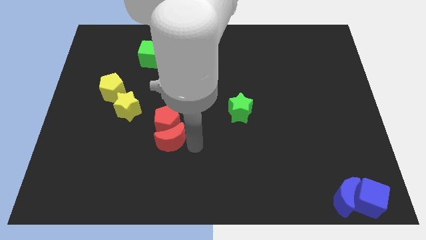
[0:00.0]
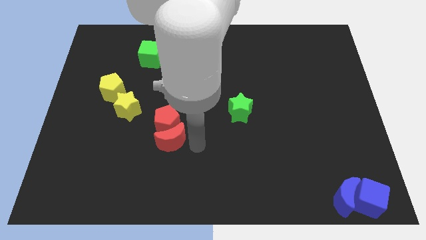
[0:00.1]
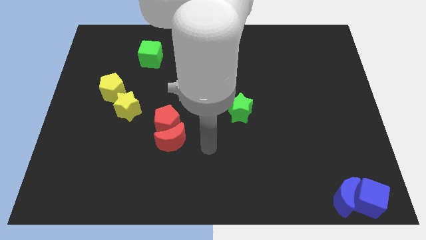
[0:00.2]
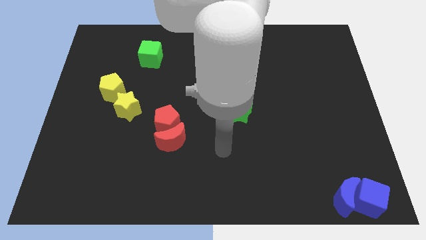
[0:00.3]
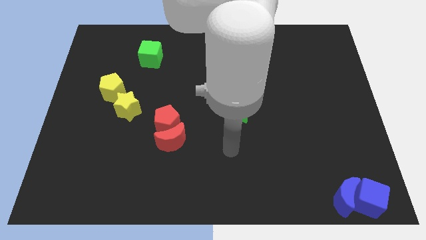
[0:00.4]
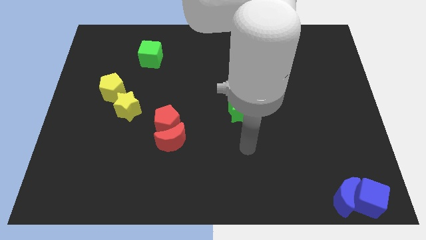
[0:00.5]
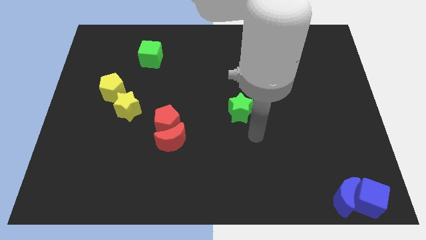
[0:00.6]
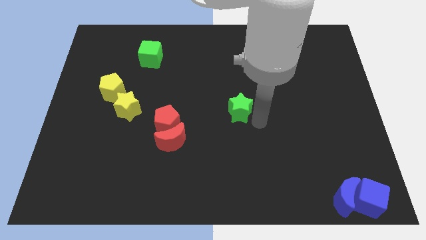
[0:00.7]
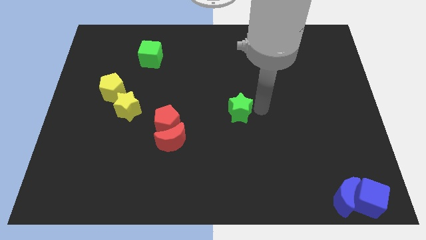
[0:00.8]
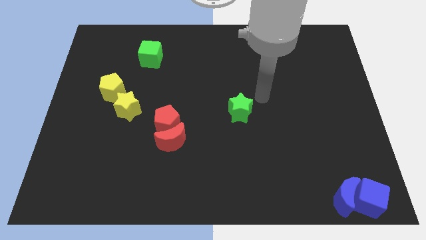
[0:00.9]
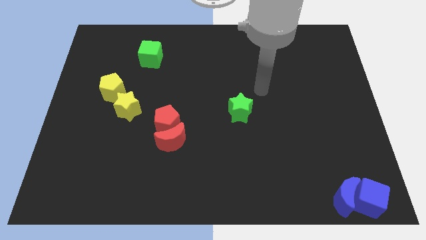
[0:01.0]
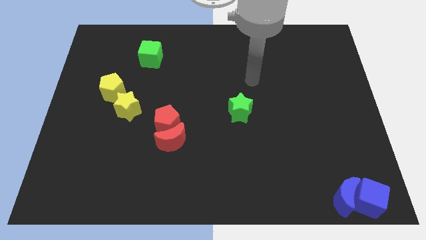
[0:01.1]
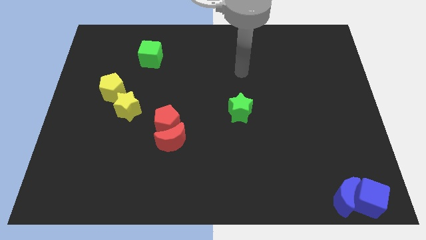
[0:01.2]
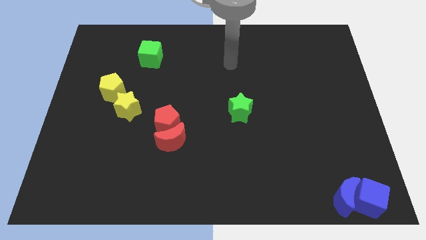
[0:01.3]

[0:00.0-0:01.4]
move your arm away from the red moon

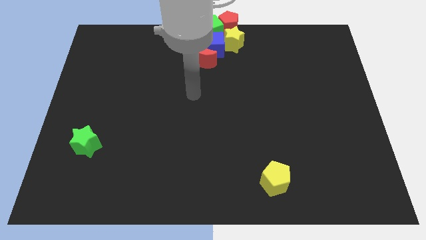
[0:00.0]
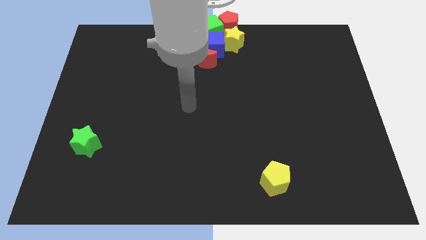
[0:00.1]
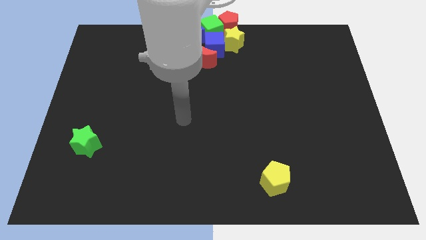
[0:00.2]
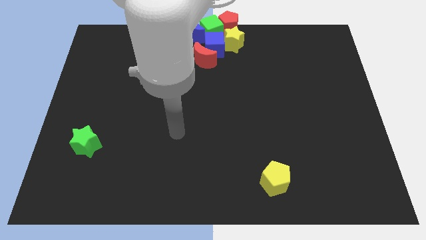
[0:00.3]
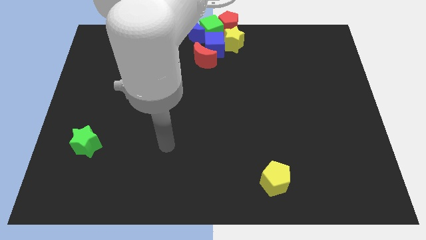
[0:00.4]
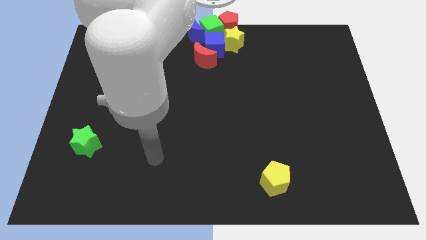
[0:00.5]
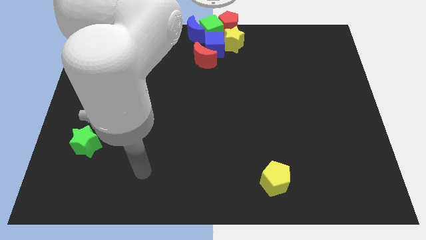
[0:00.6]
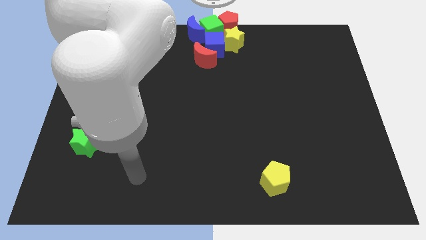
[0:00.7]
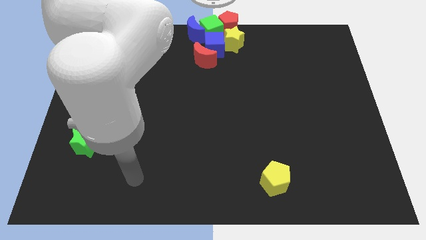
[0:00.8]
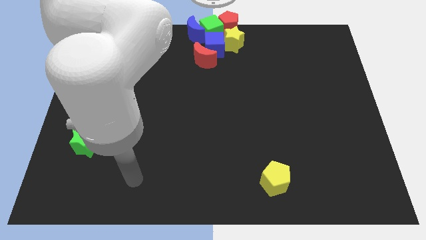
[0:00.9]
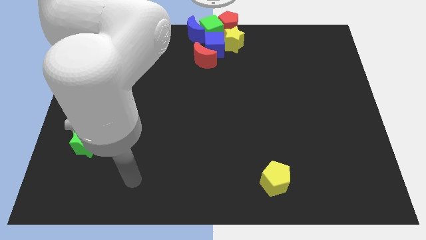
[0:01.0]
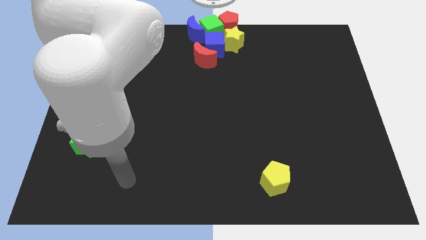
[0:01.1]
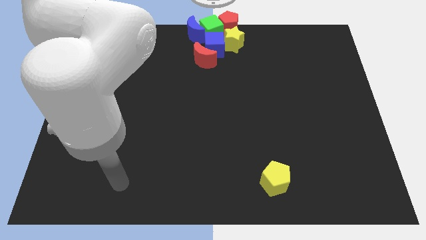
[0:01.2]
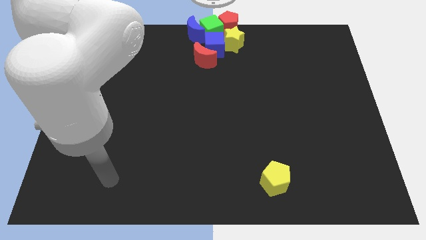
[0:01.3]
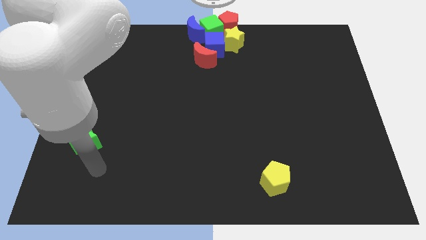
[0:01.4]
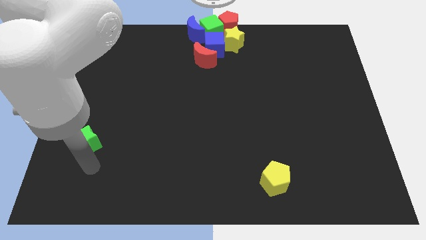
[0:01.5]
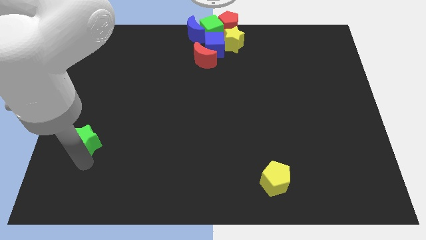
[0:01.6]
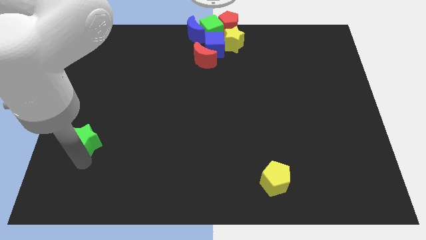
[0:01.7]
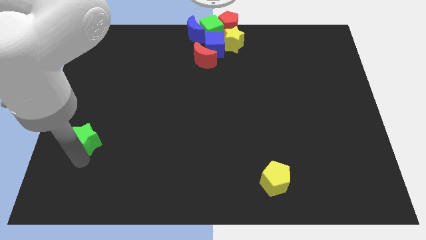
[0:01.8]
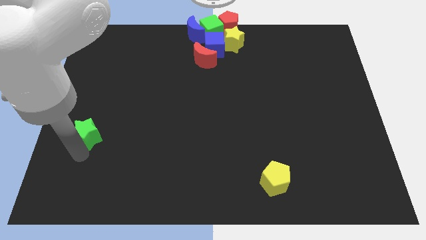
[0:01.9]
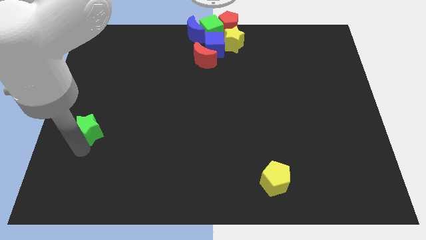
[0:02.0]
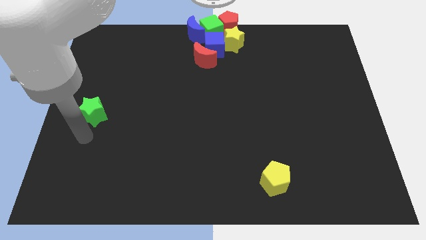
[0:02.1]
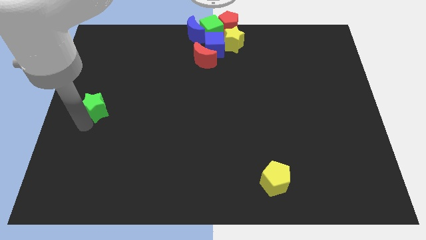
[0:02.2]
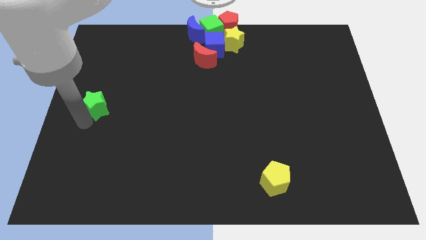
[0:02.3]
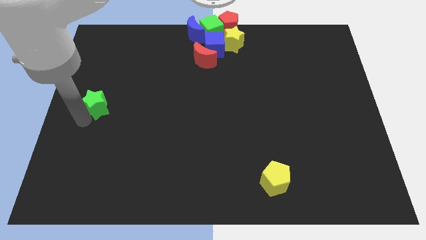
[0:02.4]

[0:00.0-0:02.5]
place the green star to the middle left of the board

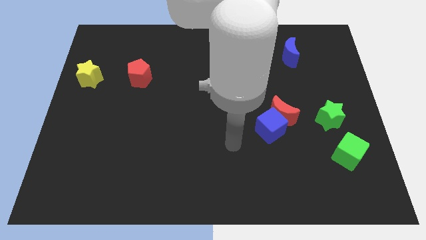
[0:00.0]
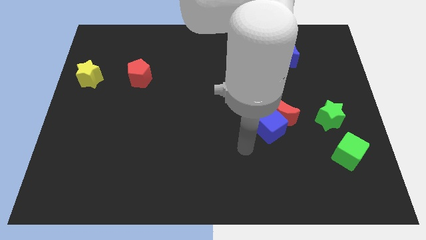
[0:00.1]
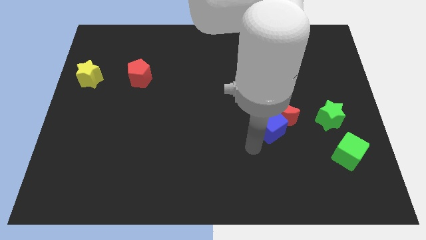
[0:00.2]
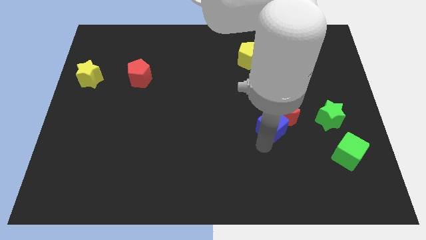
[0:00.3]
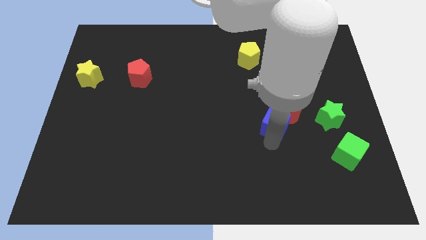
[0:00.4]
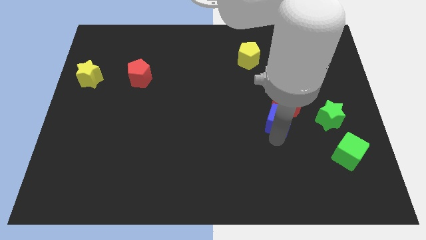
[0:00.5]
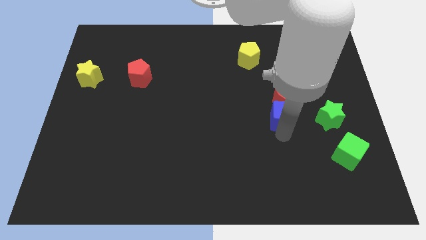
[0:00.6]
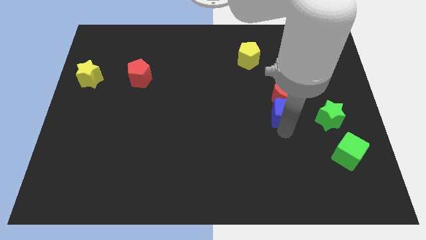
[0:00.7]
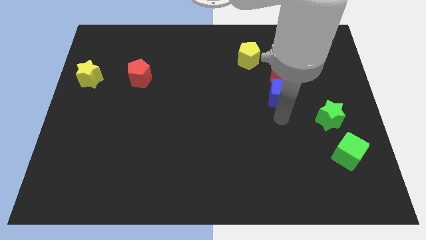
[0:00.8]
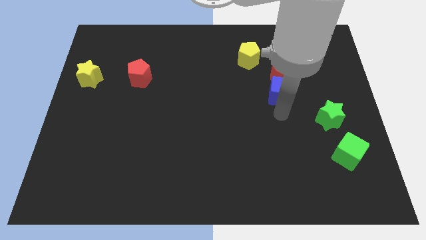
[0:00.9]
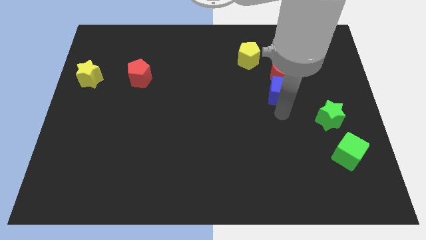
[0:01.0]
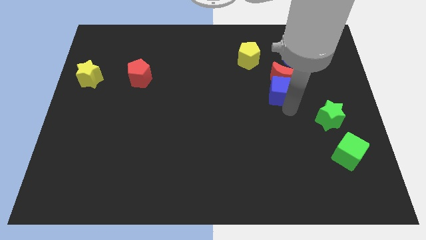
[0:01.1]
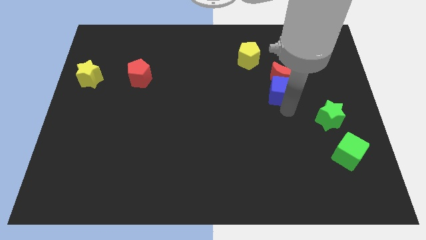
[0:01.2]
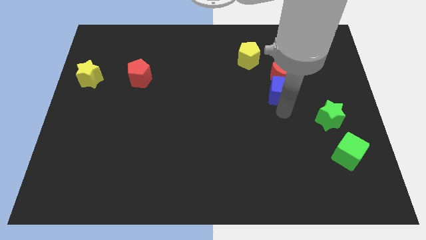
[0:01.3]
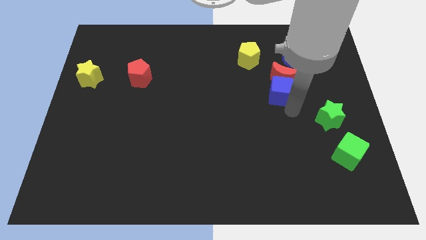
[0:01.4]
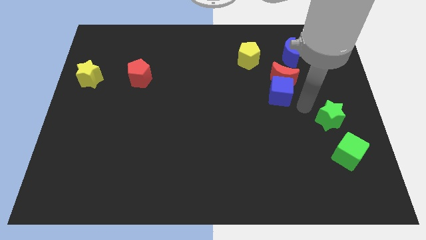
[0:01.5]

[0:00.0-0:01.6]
move the blue cube and red crescent towards the blue crescent

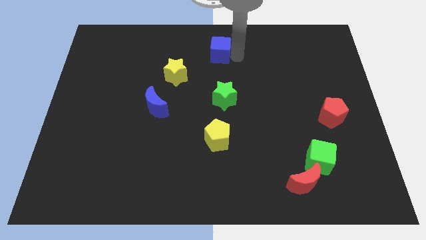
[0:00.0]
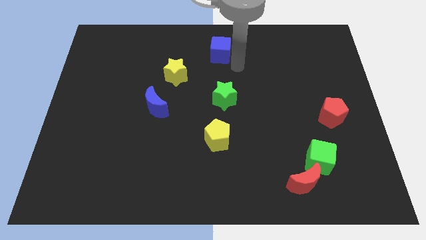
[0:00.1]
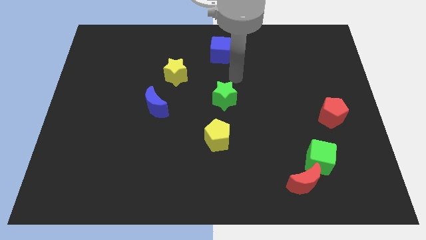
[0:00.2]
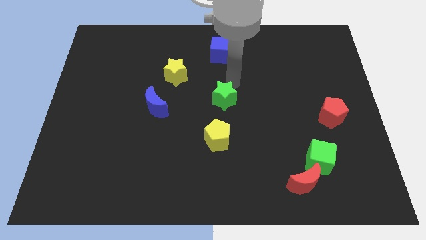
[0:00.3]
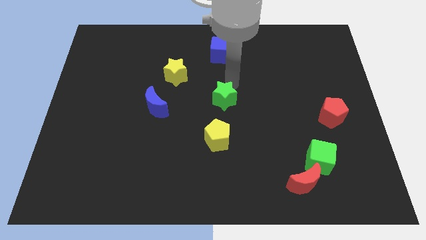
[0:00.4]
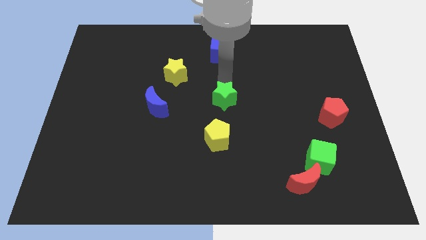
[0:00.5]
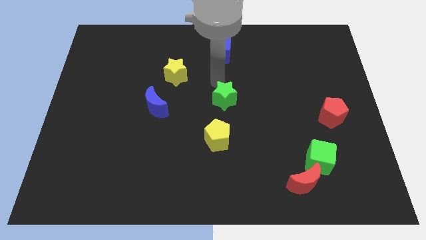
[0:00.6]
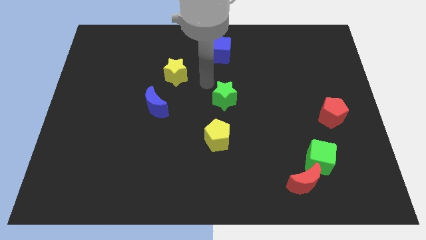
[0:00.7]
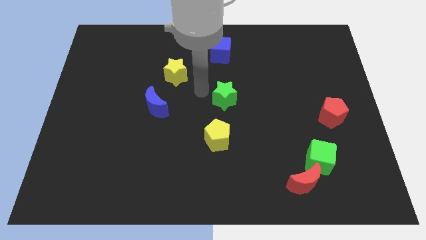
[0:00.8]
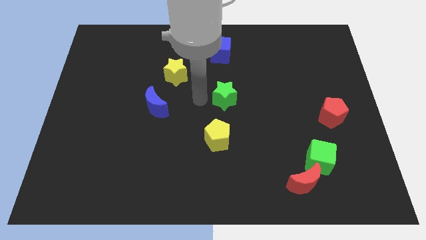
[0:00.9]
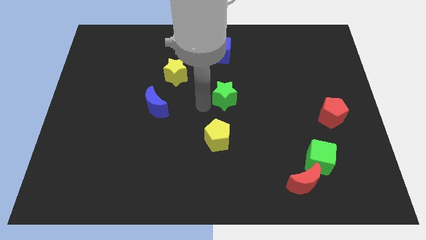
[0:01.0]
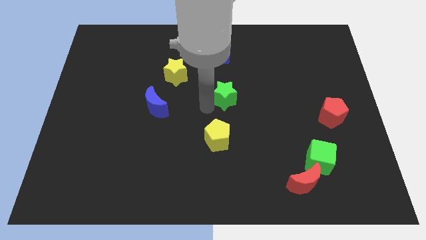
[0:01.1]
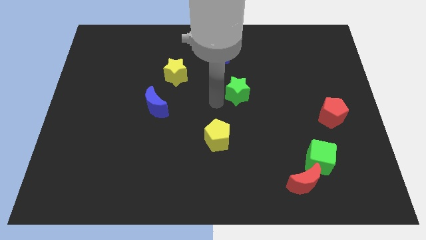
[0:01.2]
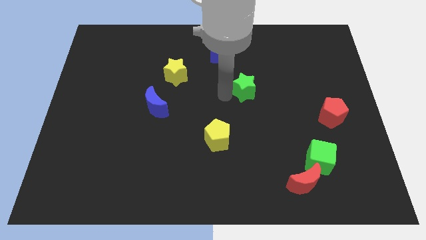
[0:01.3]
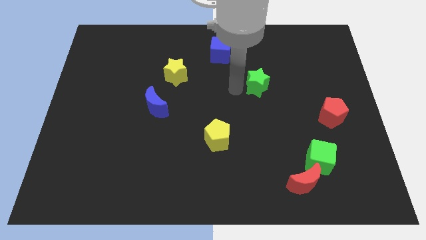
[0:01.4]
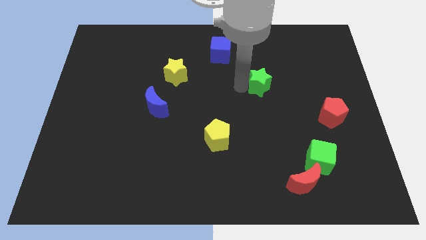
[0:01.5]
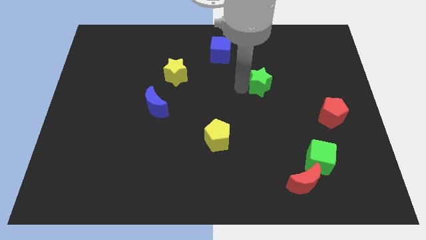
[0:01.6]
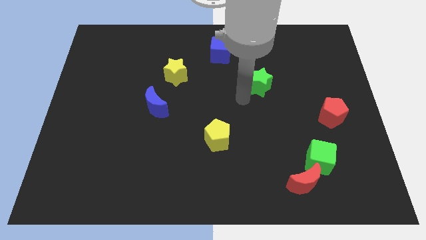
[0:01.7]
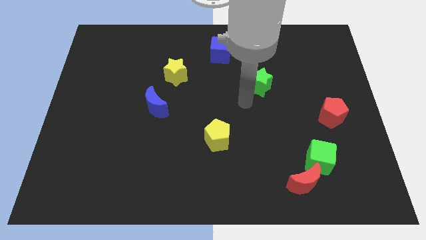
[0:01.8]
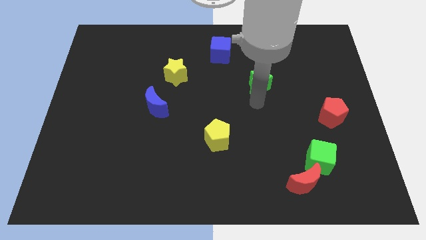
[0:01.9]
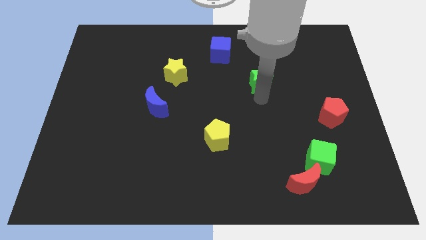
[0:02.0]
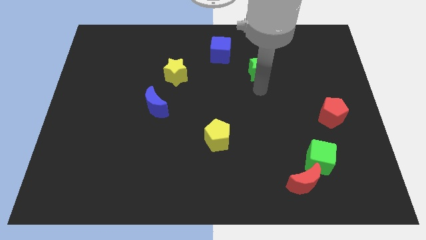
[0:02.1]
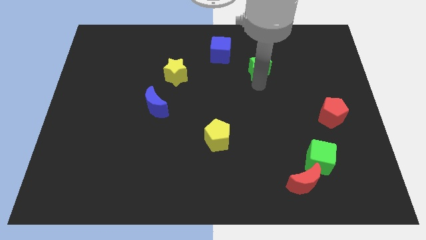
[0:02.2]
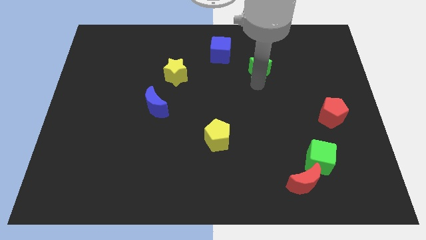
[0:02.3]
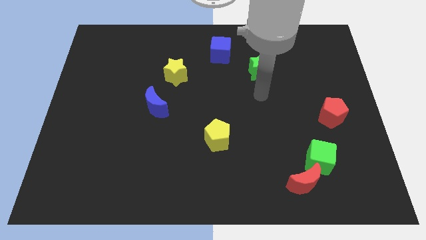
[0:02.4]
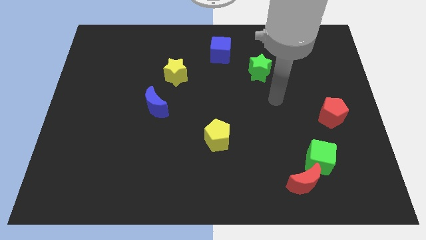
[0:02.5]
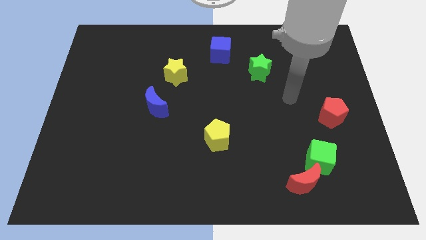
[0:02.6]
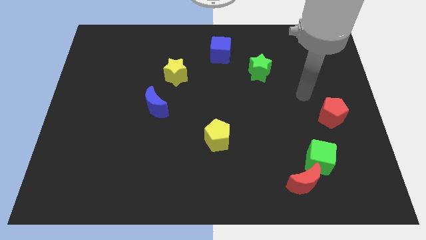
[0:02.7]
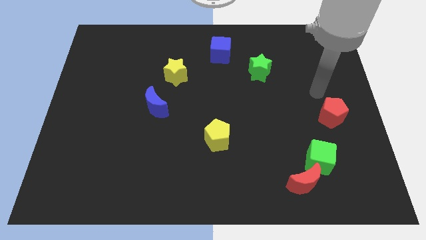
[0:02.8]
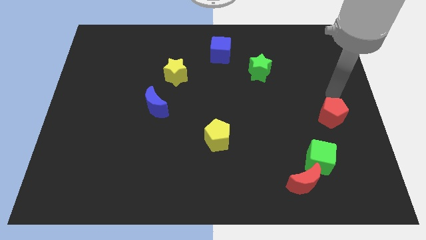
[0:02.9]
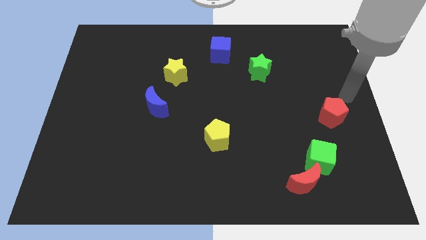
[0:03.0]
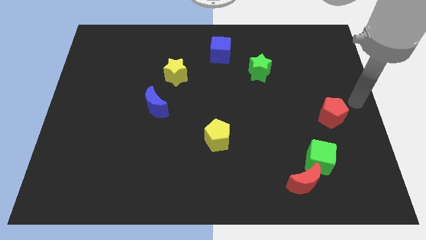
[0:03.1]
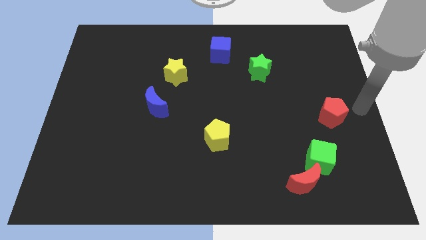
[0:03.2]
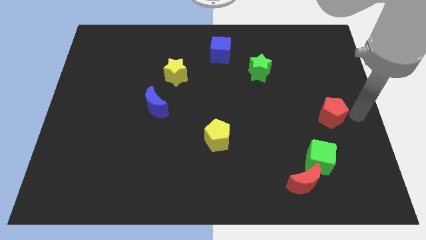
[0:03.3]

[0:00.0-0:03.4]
put the green star in between blue cube and red pentagon
